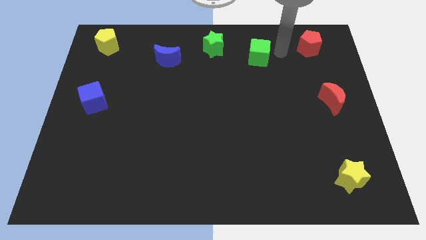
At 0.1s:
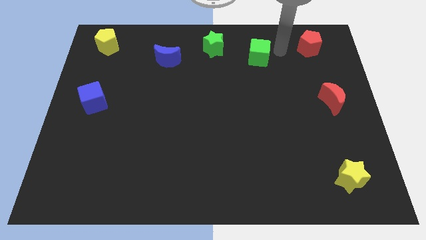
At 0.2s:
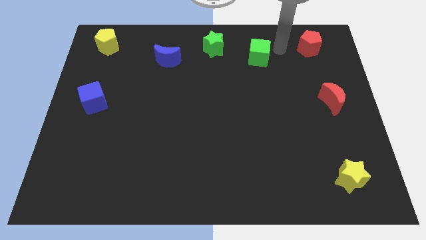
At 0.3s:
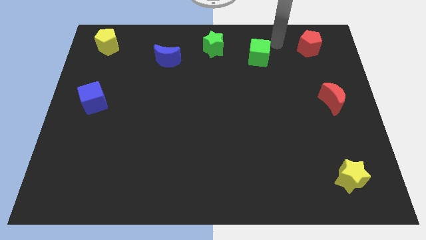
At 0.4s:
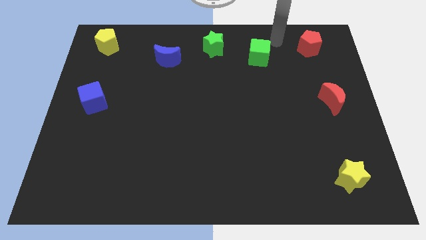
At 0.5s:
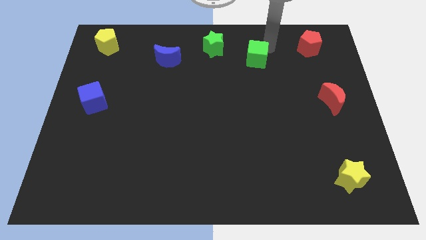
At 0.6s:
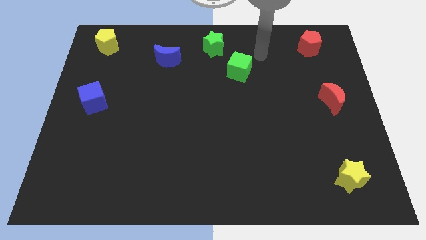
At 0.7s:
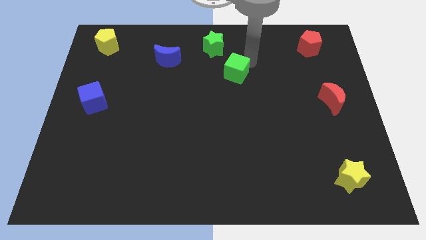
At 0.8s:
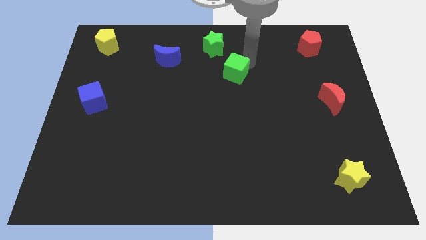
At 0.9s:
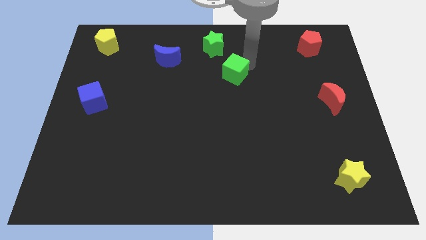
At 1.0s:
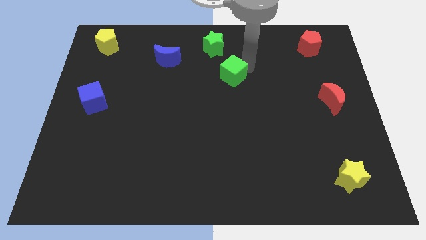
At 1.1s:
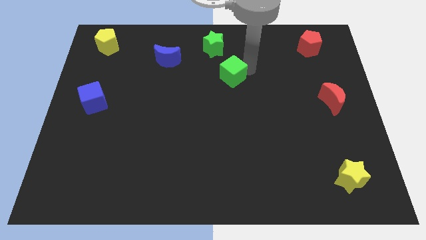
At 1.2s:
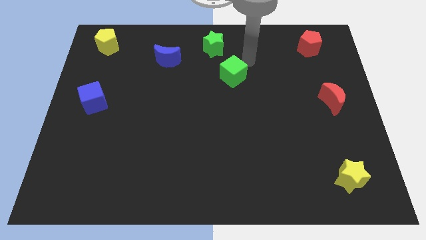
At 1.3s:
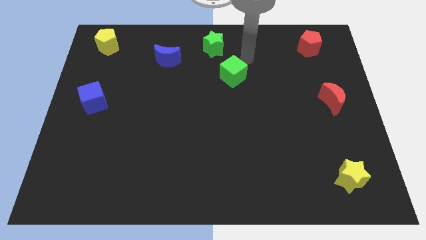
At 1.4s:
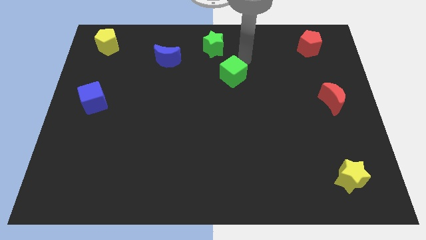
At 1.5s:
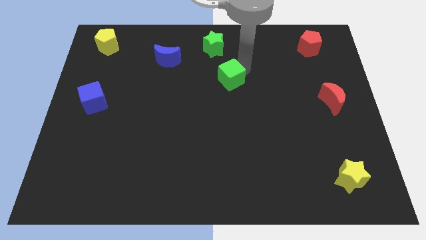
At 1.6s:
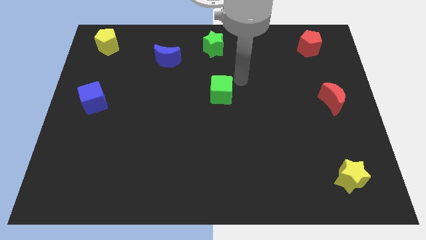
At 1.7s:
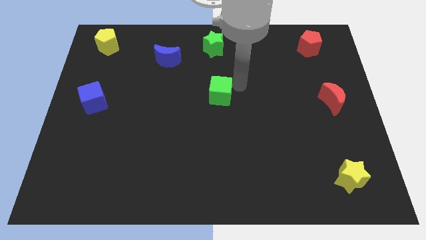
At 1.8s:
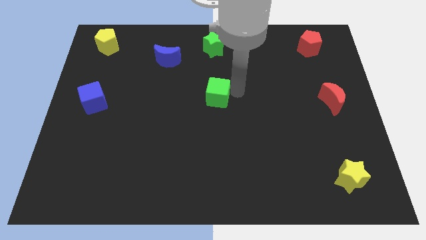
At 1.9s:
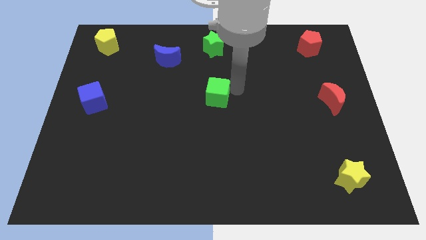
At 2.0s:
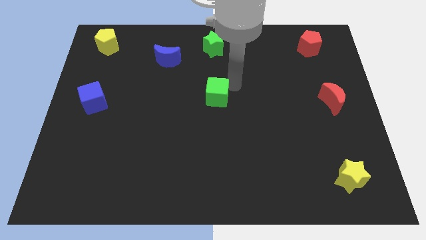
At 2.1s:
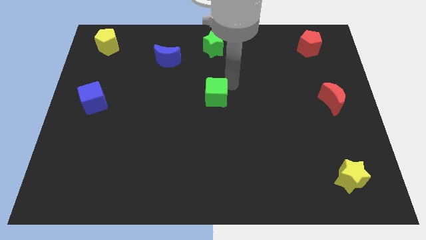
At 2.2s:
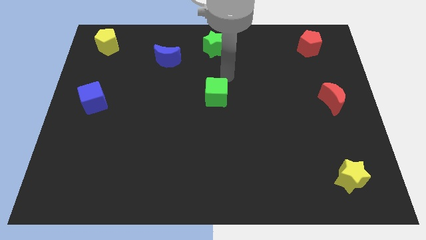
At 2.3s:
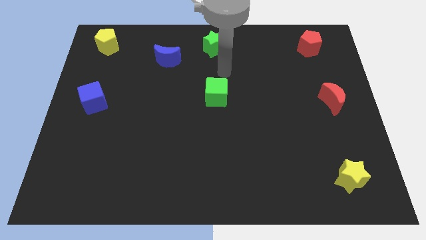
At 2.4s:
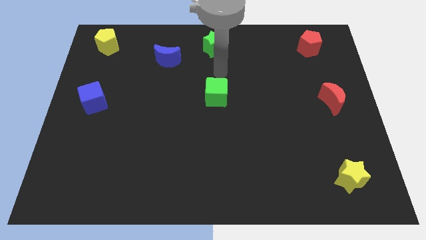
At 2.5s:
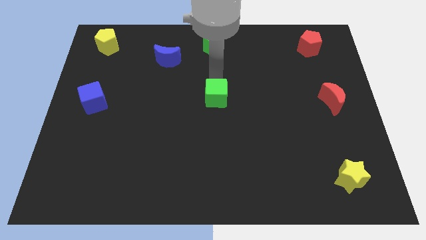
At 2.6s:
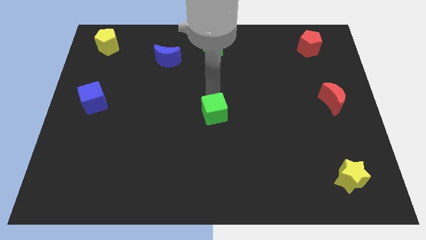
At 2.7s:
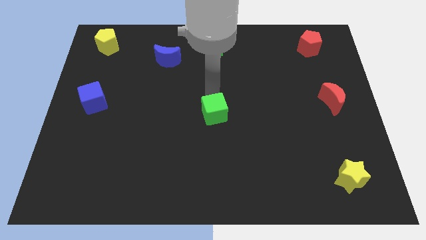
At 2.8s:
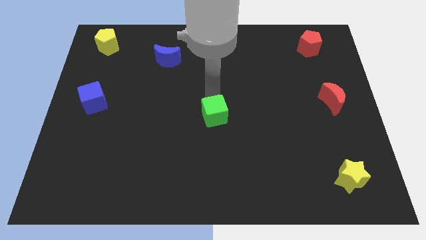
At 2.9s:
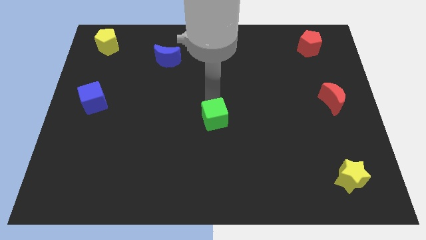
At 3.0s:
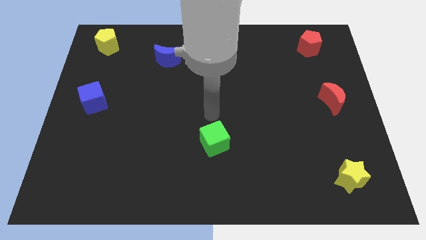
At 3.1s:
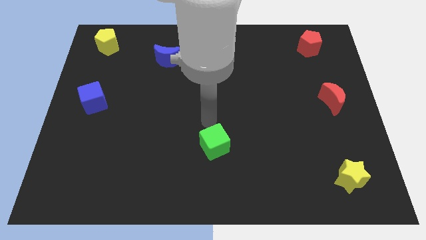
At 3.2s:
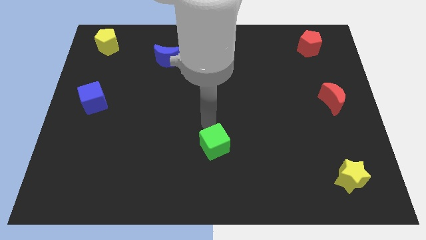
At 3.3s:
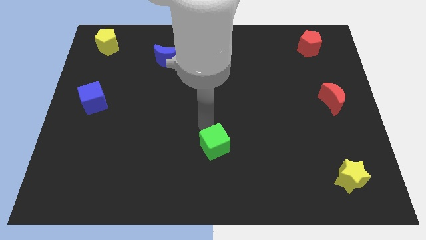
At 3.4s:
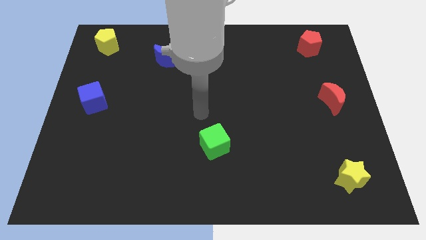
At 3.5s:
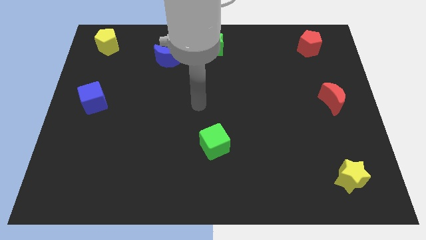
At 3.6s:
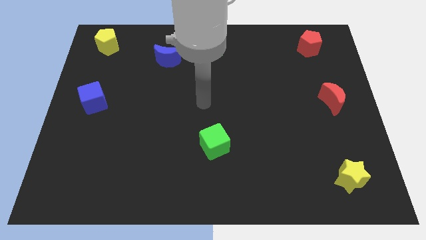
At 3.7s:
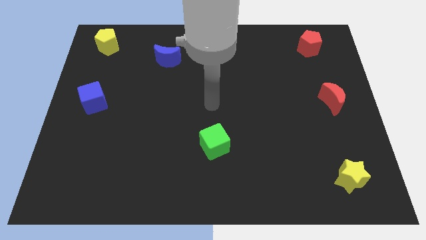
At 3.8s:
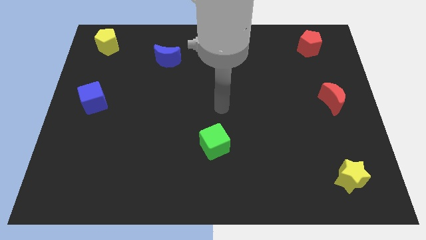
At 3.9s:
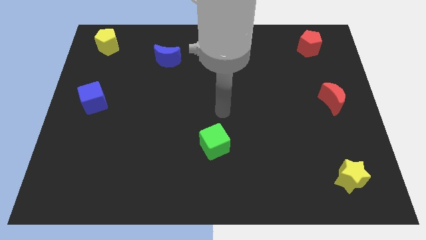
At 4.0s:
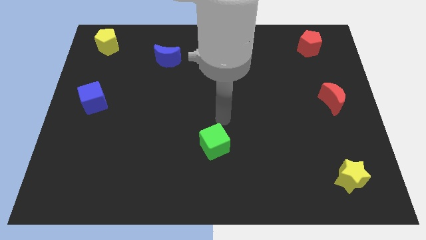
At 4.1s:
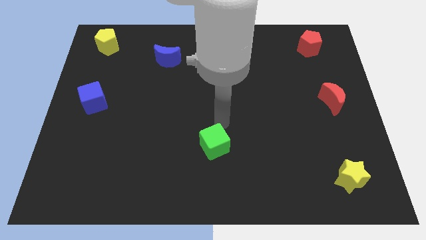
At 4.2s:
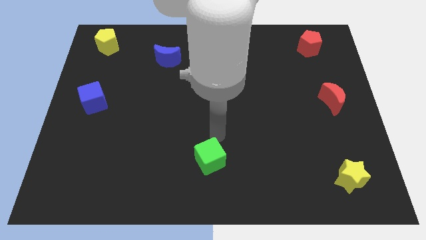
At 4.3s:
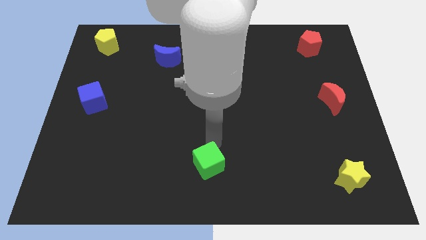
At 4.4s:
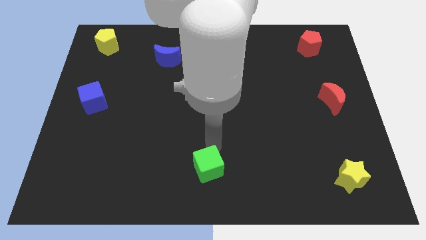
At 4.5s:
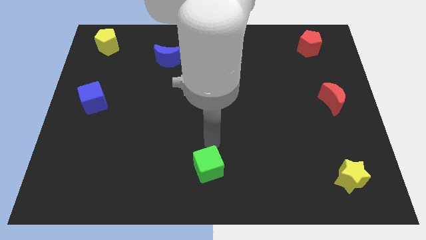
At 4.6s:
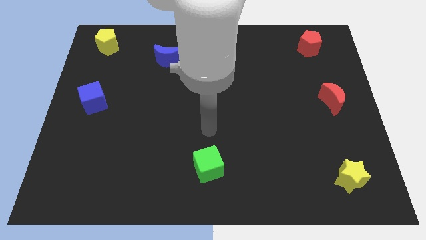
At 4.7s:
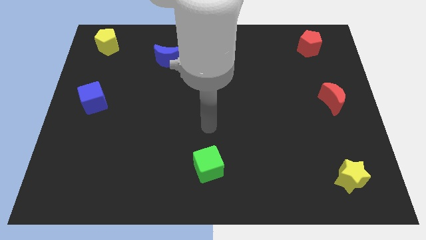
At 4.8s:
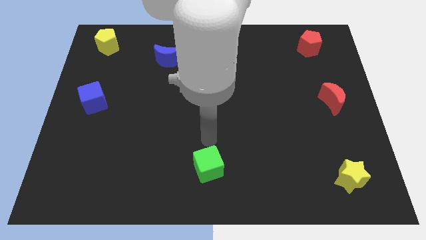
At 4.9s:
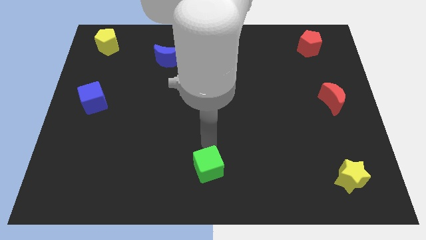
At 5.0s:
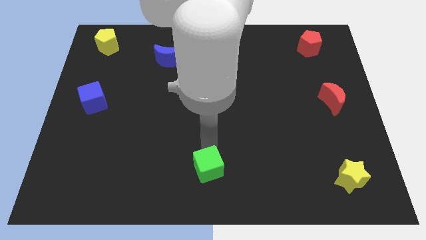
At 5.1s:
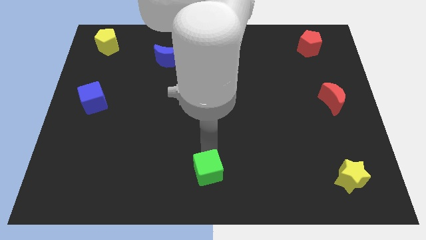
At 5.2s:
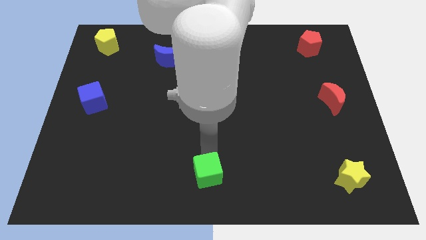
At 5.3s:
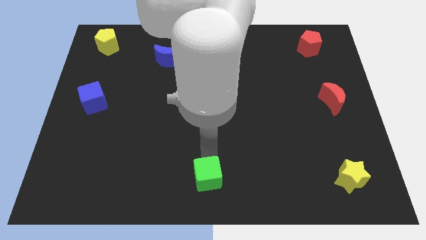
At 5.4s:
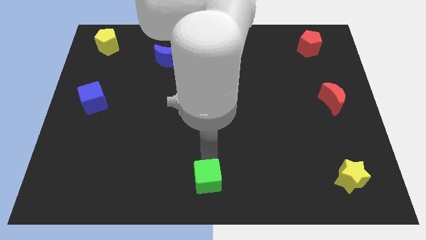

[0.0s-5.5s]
push the green cube to the bottom center

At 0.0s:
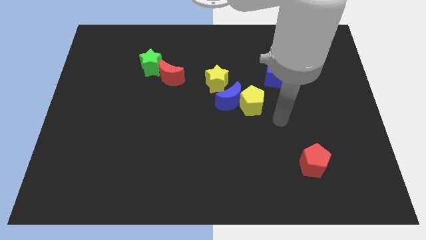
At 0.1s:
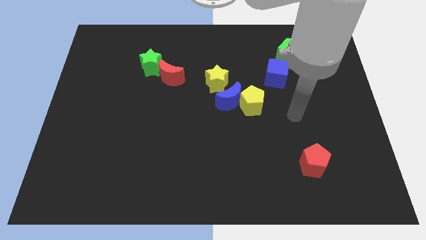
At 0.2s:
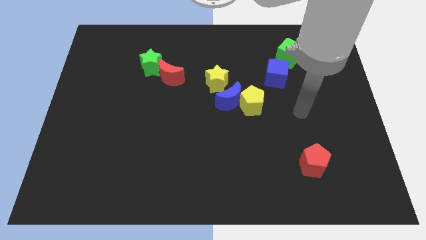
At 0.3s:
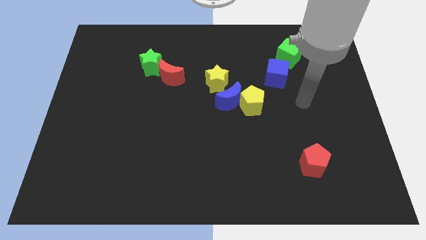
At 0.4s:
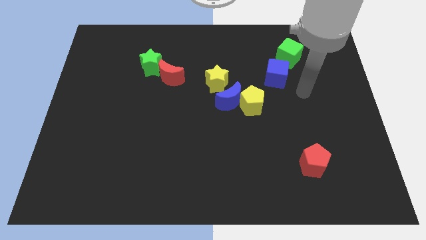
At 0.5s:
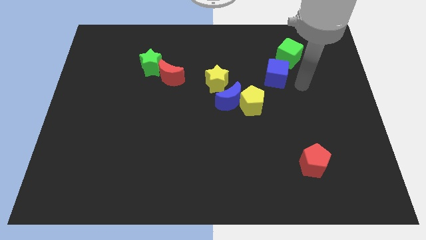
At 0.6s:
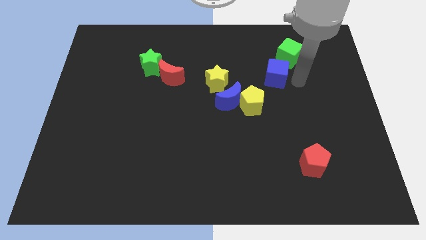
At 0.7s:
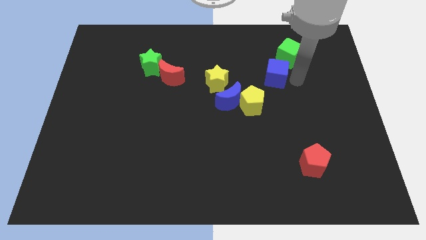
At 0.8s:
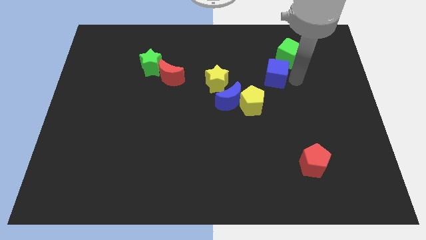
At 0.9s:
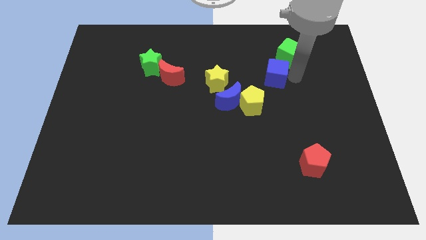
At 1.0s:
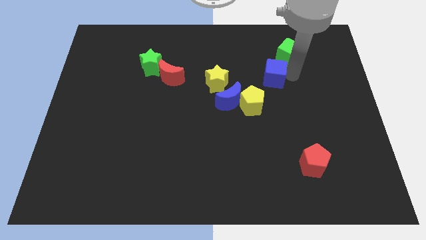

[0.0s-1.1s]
move your arm right to the blue cube

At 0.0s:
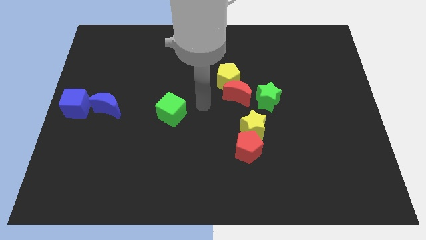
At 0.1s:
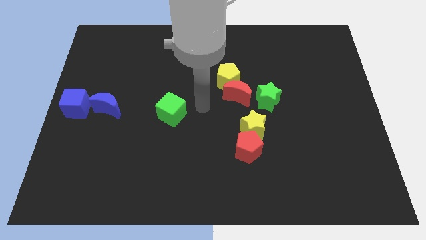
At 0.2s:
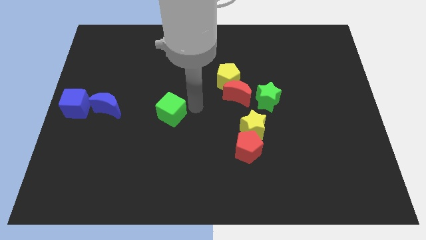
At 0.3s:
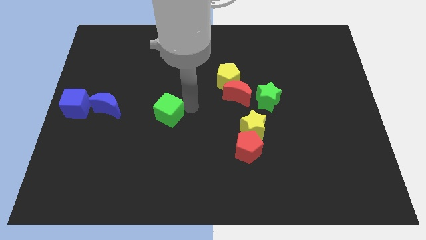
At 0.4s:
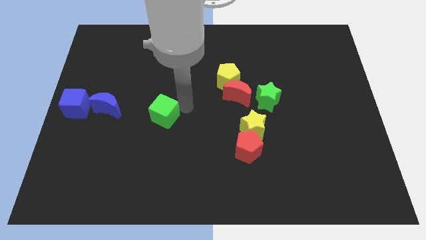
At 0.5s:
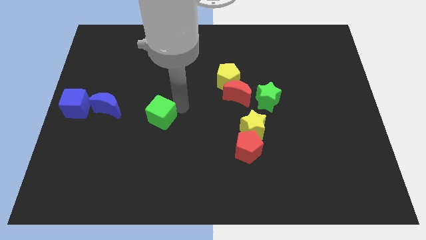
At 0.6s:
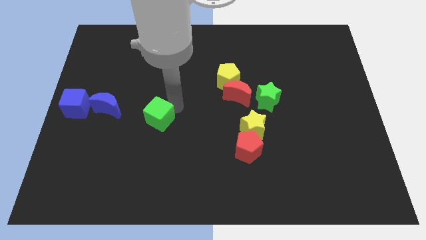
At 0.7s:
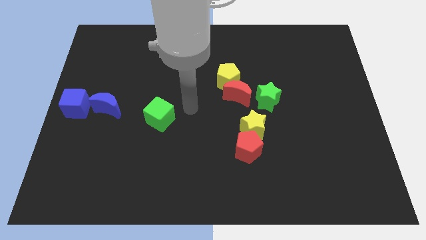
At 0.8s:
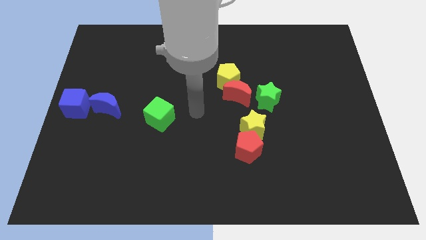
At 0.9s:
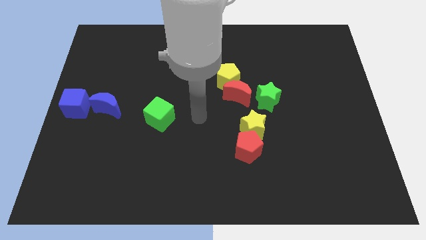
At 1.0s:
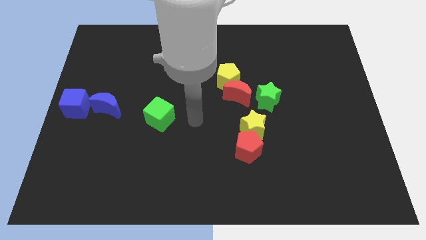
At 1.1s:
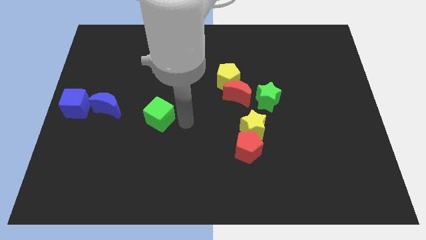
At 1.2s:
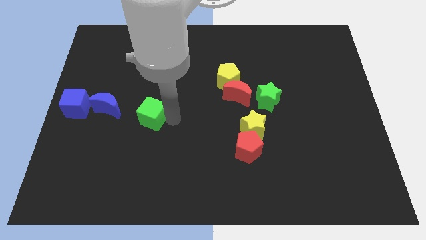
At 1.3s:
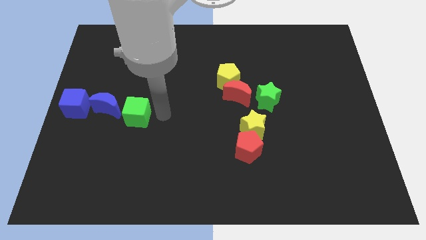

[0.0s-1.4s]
push the green cube close to the blue crescent

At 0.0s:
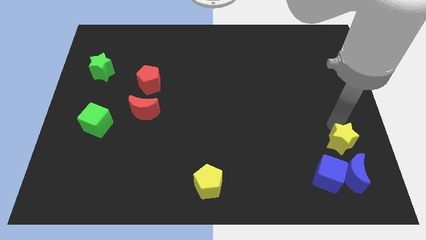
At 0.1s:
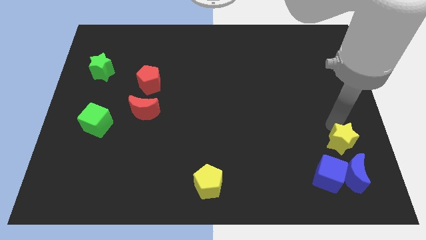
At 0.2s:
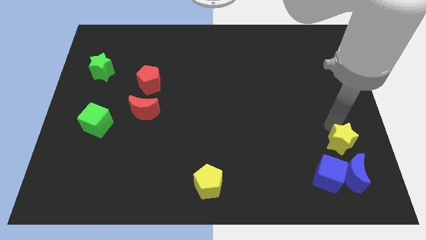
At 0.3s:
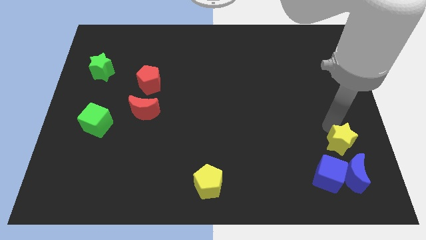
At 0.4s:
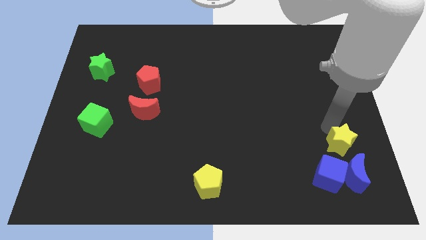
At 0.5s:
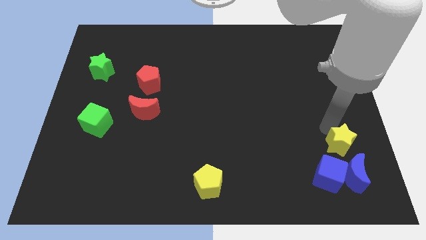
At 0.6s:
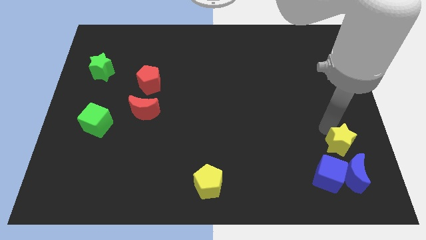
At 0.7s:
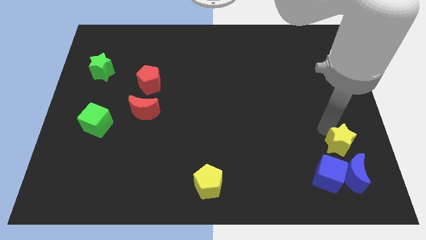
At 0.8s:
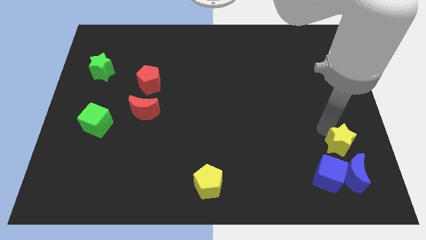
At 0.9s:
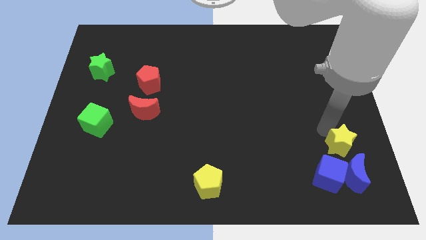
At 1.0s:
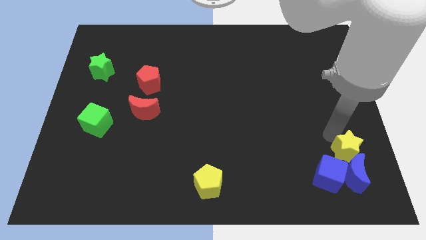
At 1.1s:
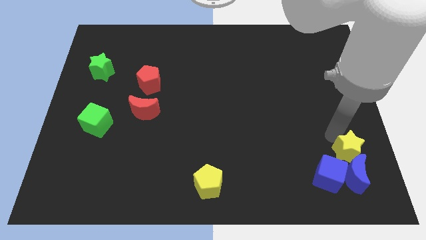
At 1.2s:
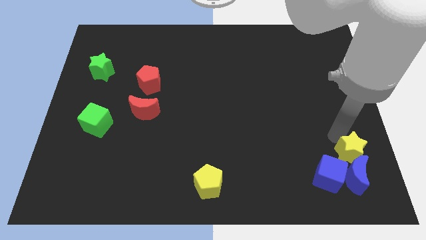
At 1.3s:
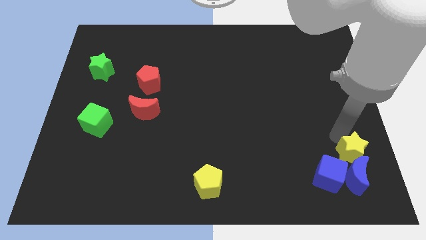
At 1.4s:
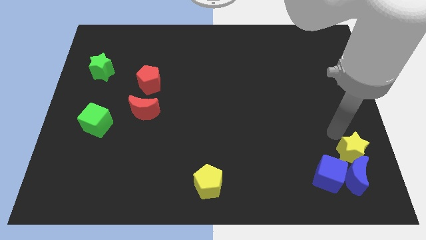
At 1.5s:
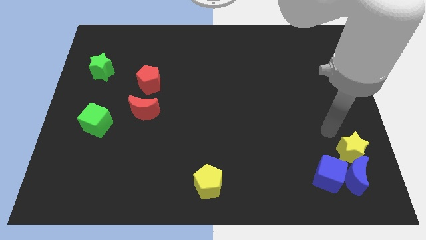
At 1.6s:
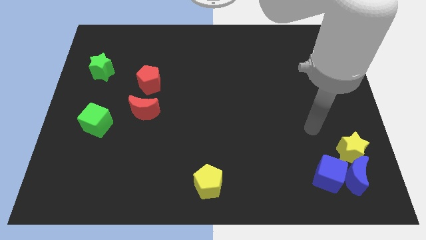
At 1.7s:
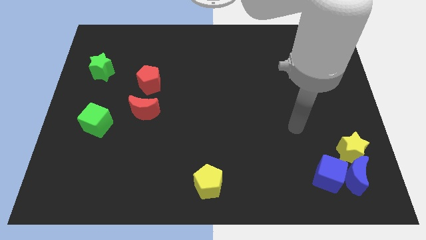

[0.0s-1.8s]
push the yellow star closer to the blue moon
